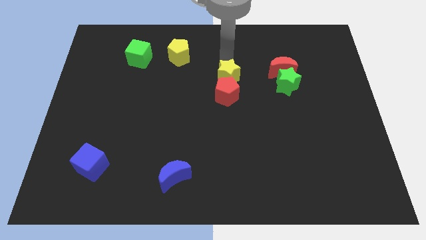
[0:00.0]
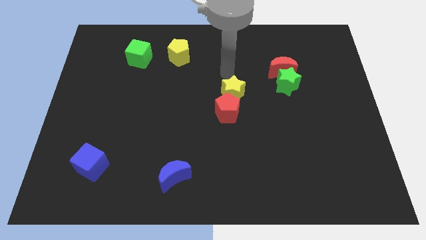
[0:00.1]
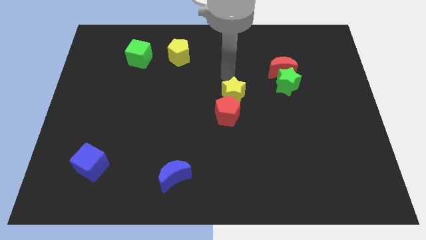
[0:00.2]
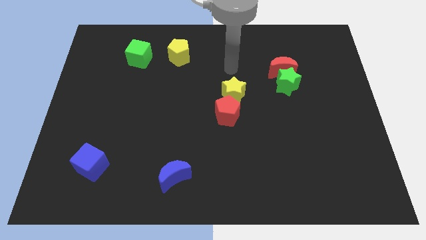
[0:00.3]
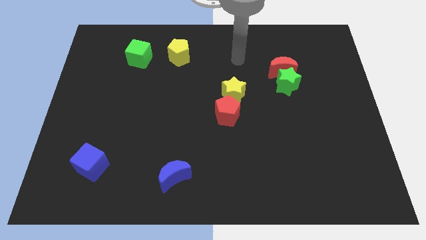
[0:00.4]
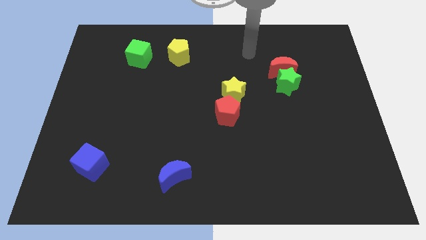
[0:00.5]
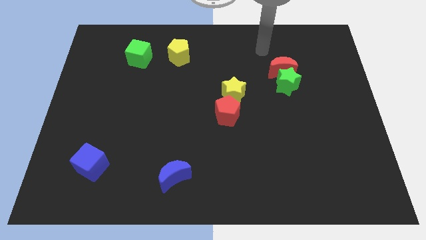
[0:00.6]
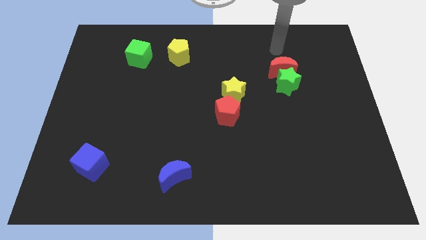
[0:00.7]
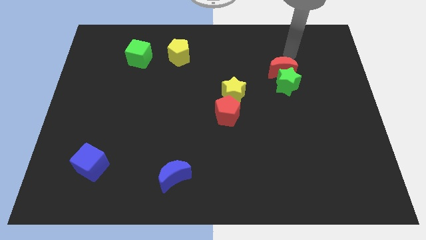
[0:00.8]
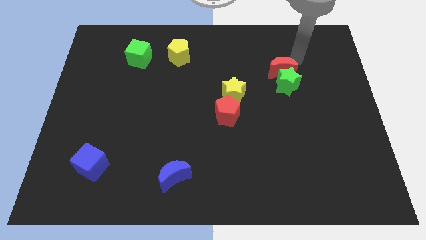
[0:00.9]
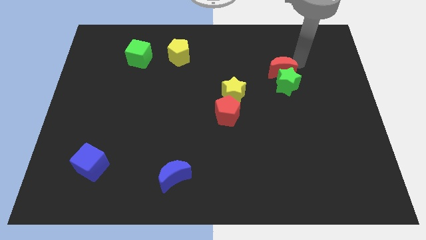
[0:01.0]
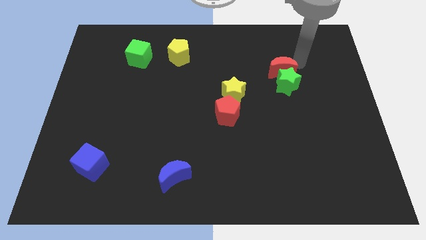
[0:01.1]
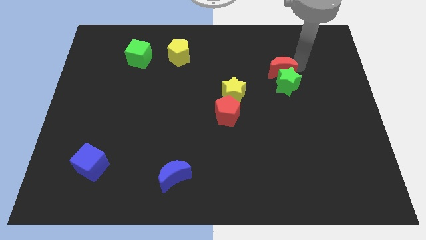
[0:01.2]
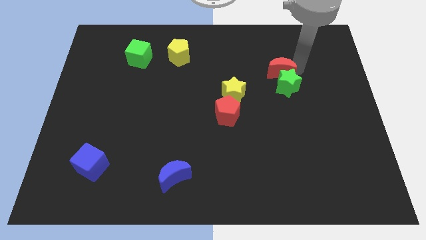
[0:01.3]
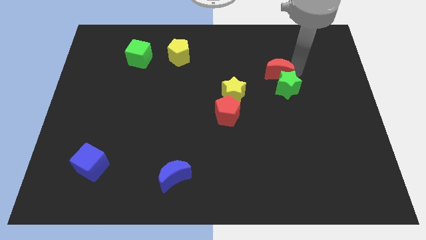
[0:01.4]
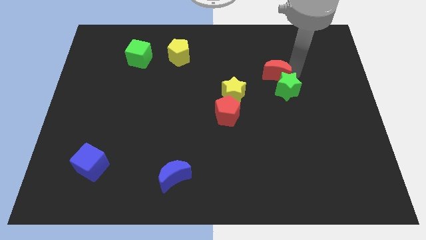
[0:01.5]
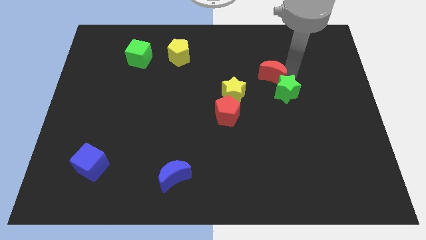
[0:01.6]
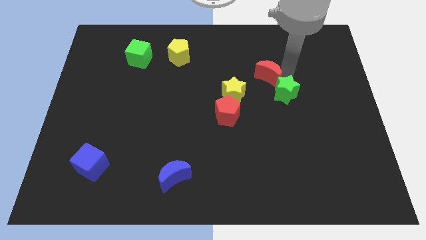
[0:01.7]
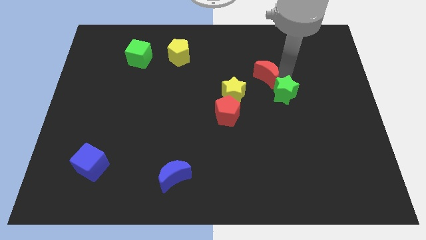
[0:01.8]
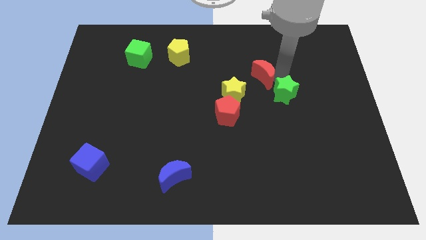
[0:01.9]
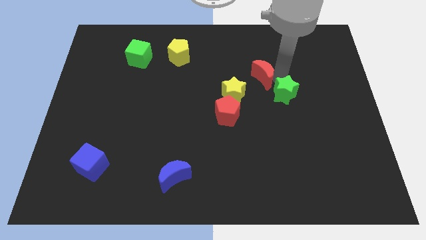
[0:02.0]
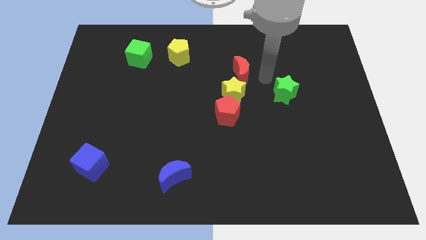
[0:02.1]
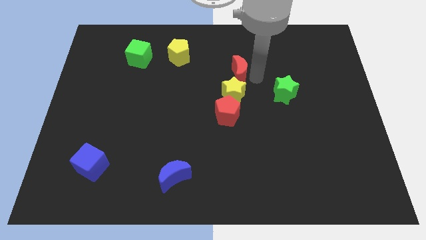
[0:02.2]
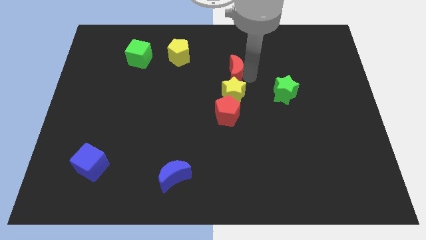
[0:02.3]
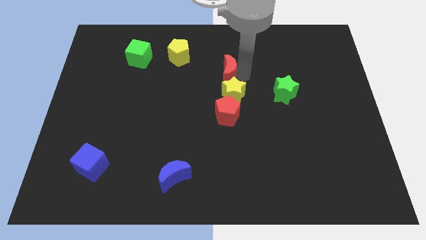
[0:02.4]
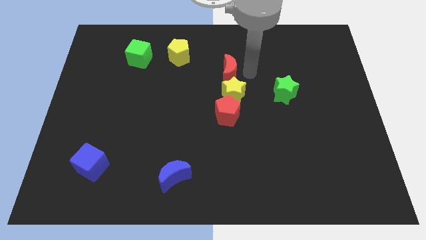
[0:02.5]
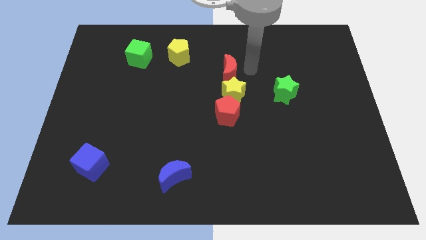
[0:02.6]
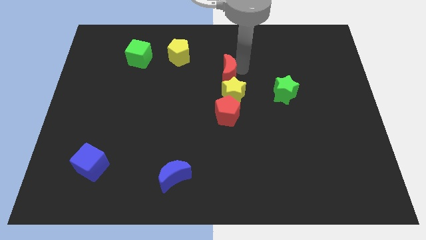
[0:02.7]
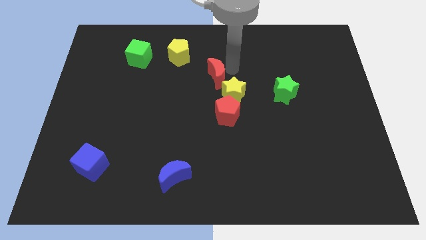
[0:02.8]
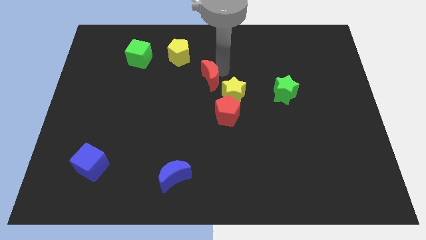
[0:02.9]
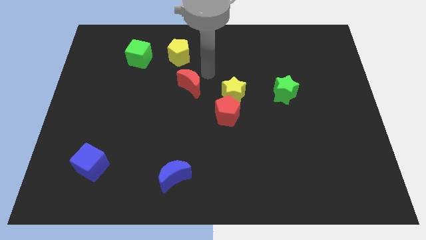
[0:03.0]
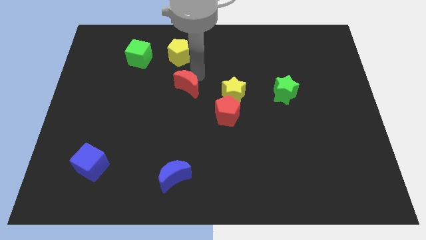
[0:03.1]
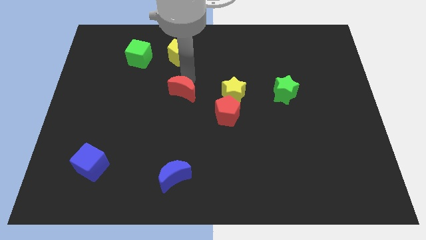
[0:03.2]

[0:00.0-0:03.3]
push red crescent to the bottom of the yellow pentagon

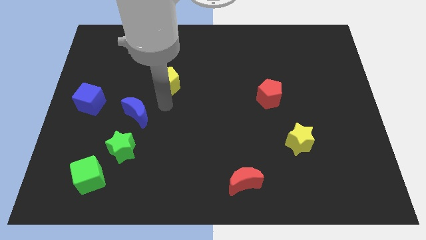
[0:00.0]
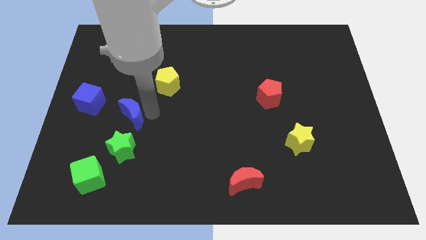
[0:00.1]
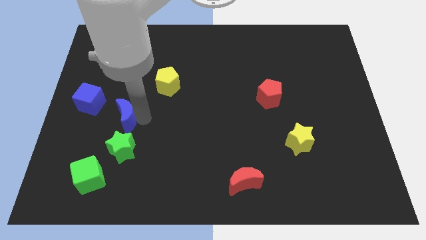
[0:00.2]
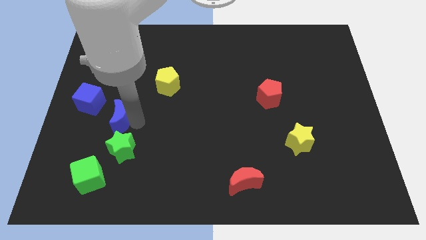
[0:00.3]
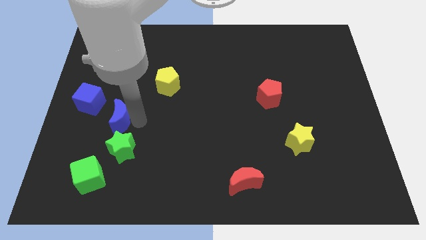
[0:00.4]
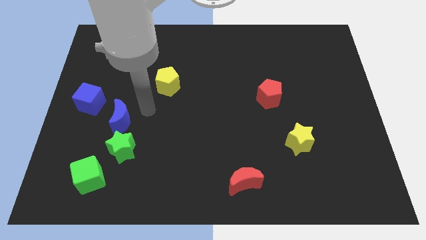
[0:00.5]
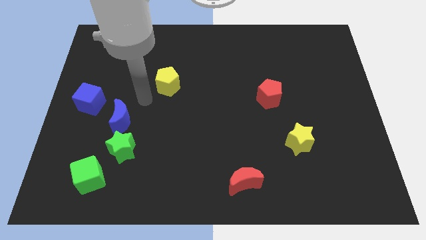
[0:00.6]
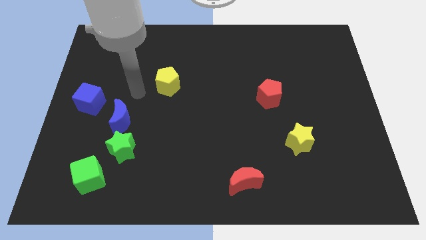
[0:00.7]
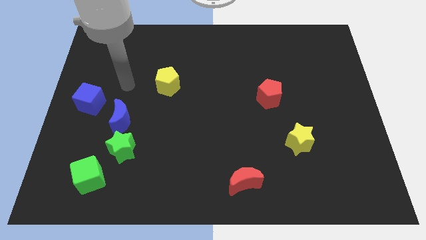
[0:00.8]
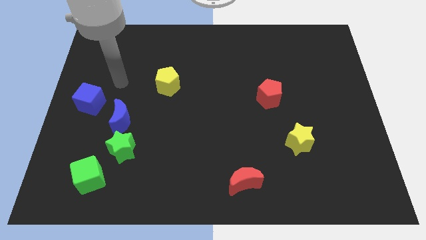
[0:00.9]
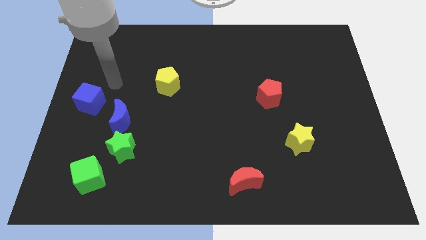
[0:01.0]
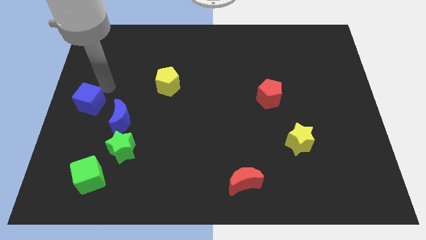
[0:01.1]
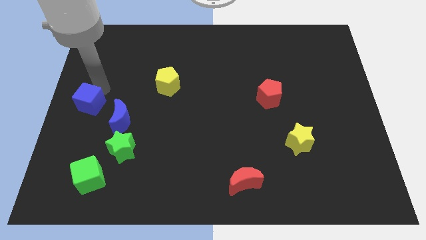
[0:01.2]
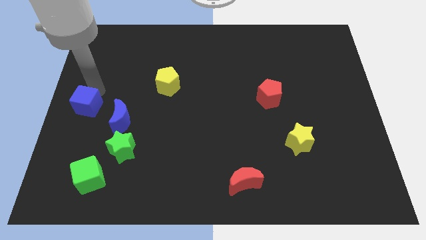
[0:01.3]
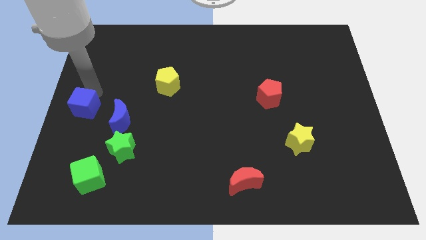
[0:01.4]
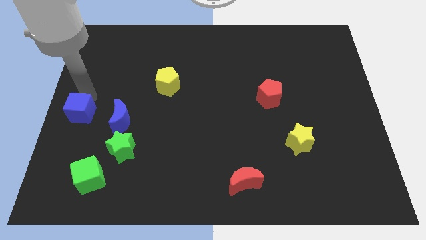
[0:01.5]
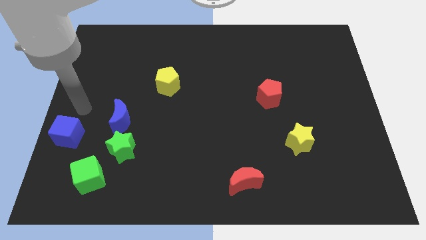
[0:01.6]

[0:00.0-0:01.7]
move blue moon close to the blue cube

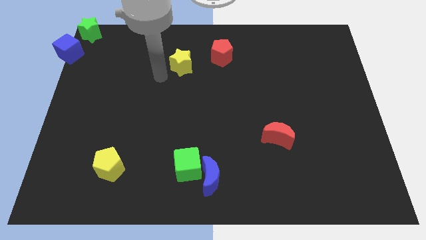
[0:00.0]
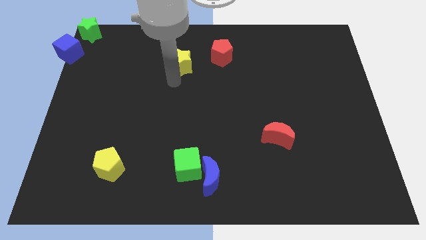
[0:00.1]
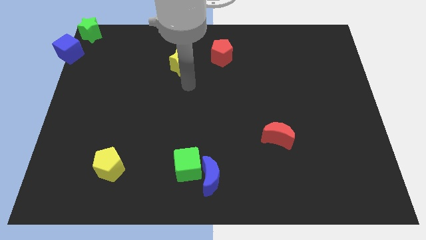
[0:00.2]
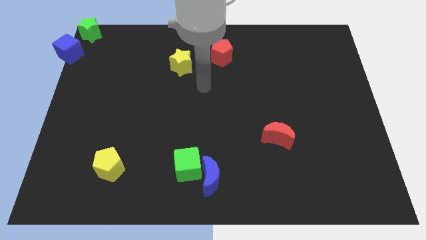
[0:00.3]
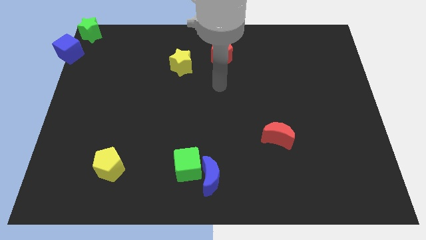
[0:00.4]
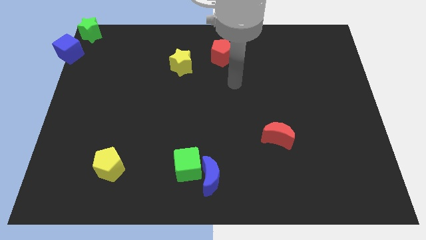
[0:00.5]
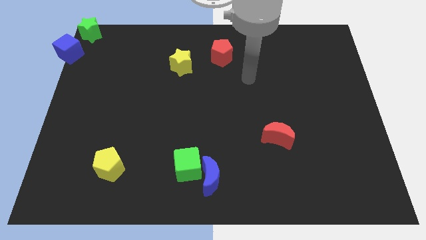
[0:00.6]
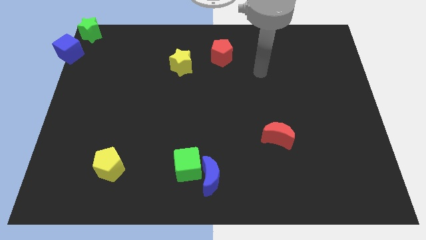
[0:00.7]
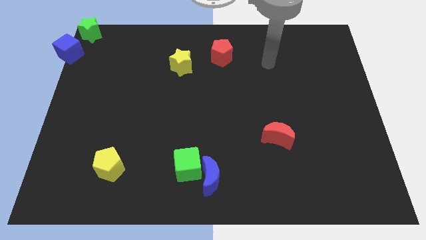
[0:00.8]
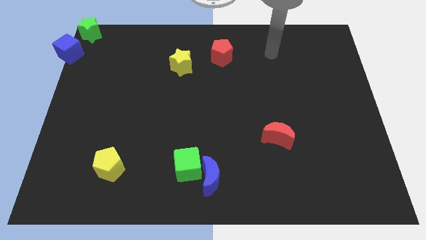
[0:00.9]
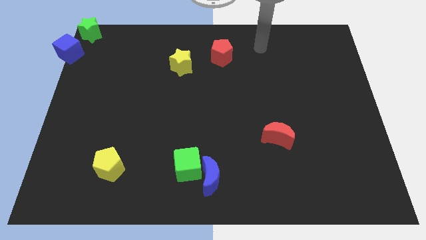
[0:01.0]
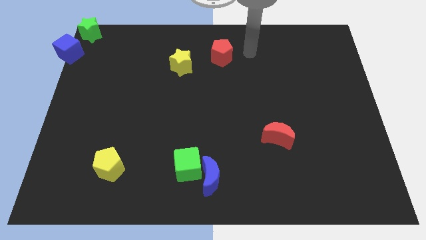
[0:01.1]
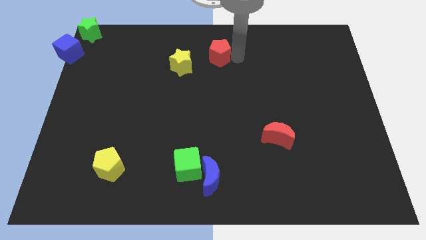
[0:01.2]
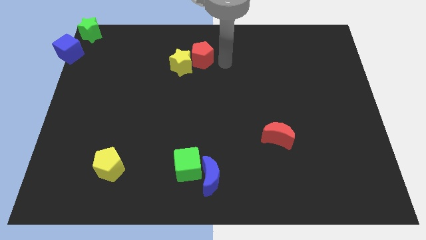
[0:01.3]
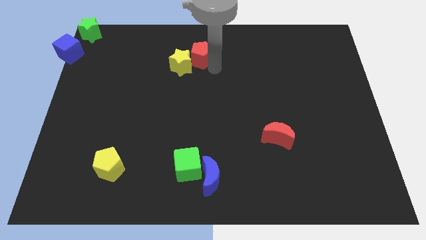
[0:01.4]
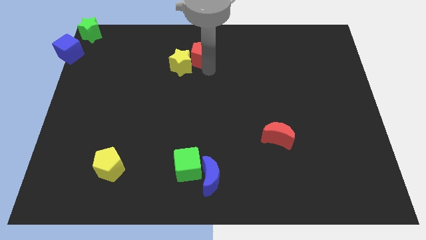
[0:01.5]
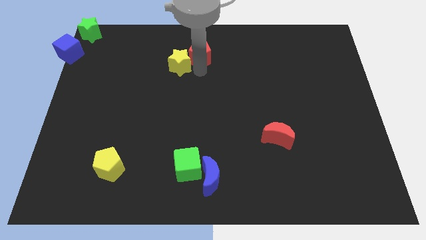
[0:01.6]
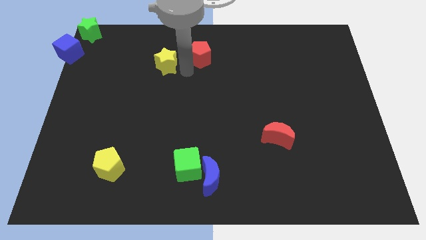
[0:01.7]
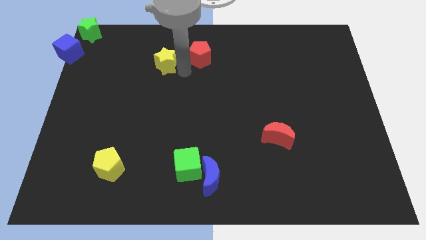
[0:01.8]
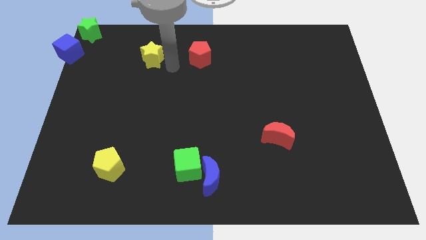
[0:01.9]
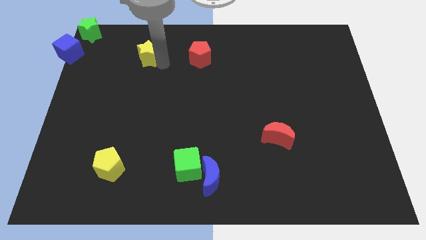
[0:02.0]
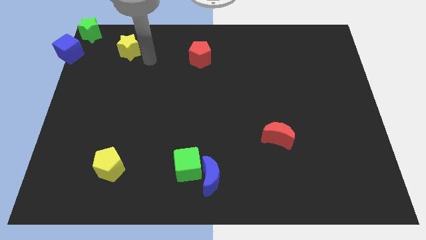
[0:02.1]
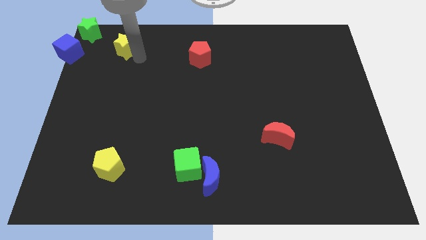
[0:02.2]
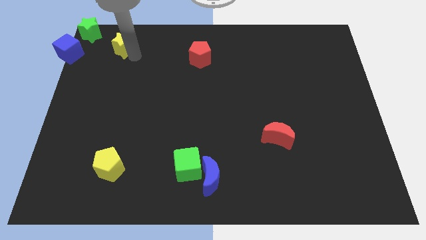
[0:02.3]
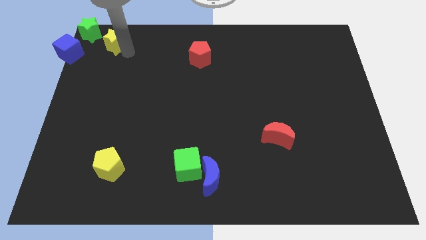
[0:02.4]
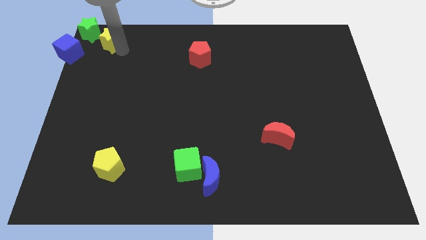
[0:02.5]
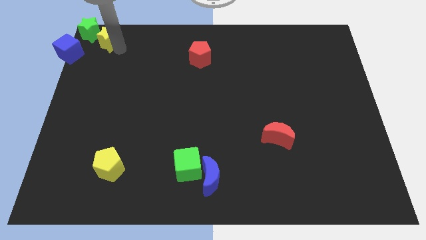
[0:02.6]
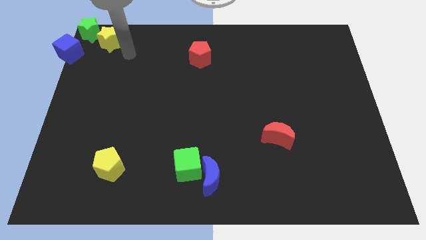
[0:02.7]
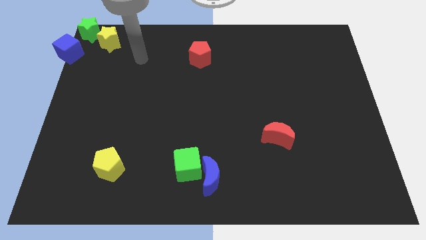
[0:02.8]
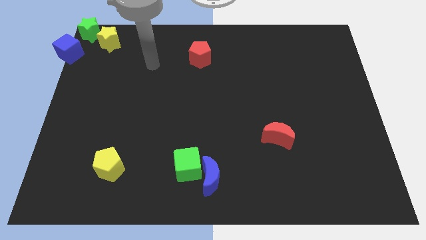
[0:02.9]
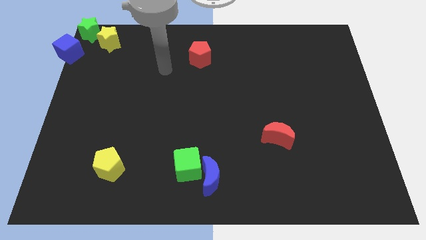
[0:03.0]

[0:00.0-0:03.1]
move yellow star from red pentagon

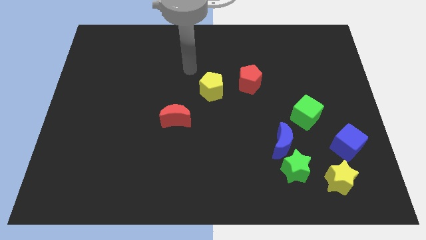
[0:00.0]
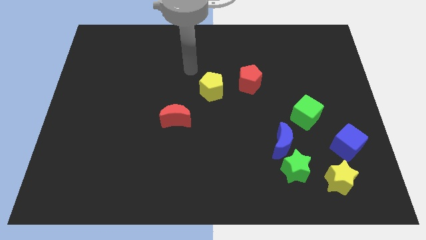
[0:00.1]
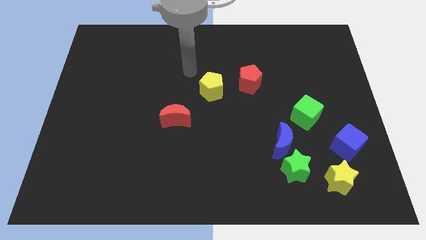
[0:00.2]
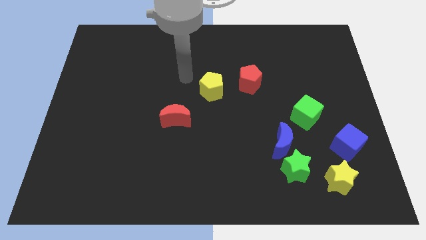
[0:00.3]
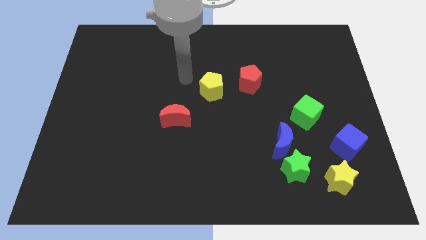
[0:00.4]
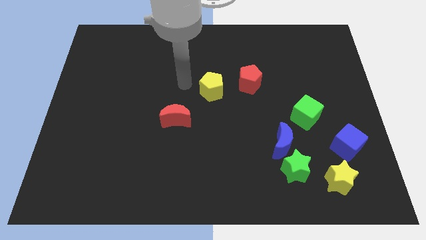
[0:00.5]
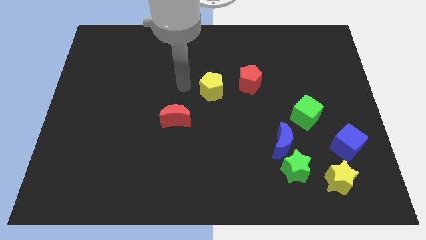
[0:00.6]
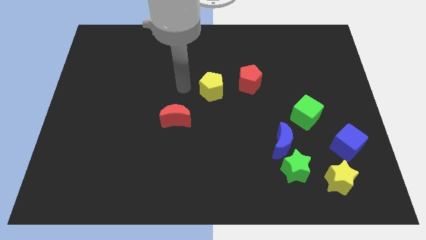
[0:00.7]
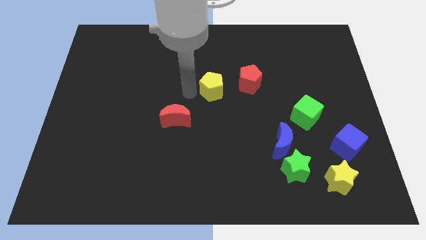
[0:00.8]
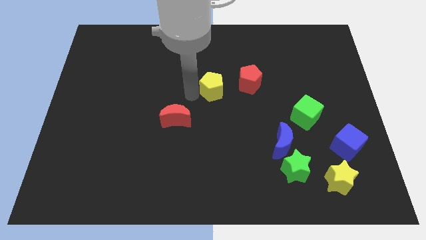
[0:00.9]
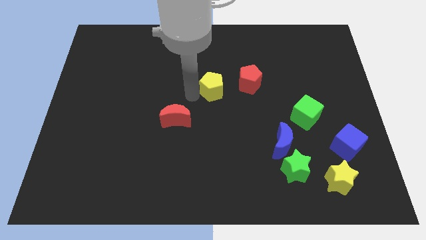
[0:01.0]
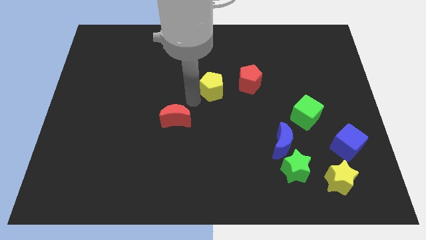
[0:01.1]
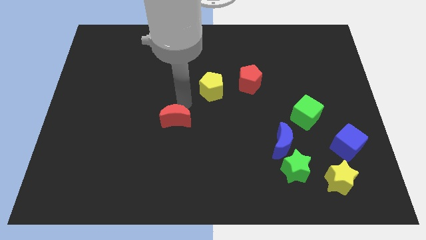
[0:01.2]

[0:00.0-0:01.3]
move arm to the centre of the yellow pentagon and red crescent
